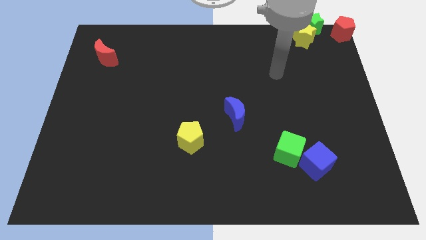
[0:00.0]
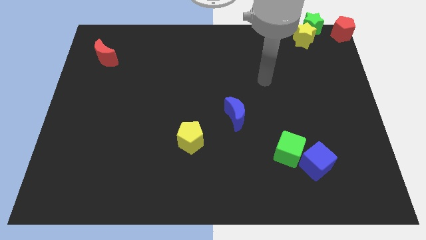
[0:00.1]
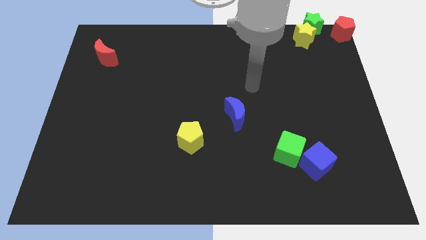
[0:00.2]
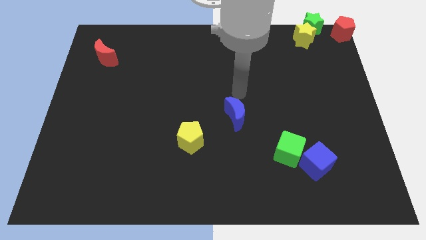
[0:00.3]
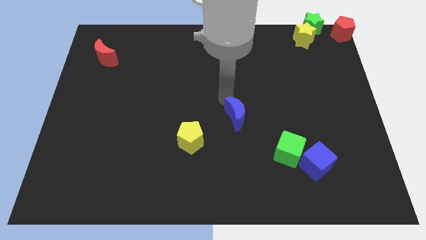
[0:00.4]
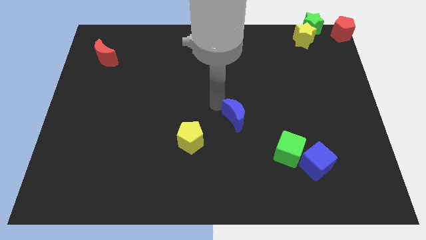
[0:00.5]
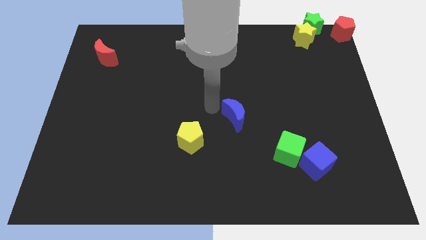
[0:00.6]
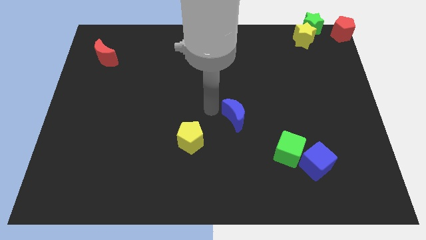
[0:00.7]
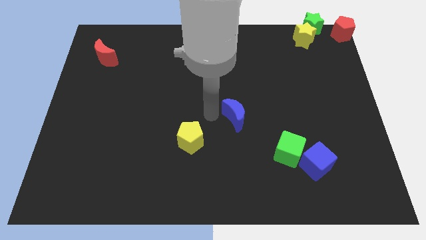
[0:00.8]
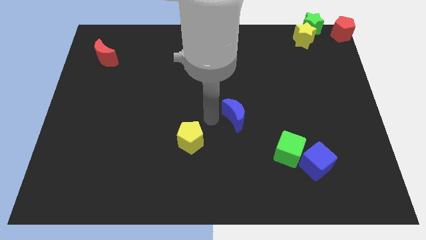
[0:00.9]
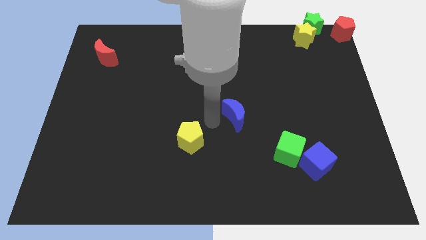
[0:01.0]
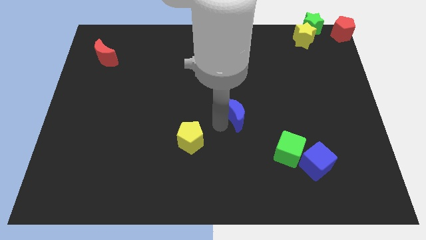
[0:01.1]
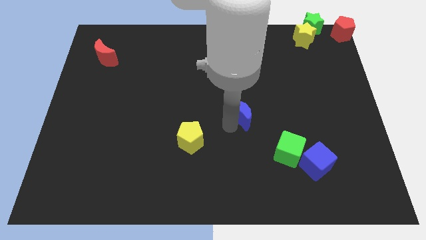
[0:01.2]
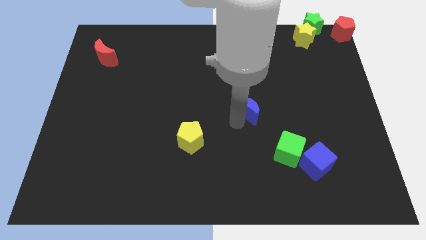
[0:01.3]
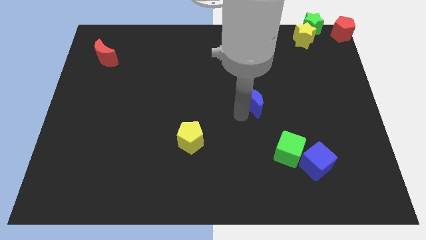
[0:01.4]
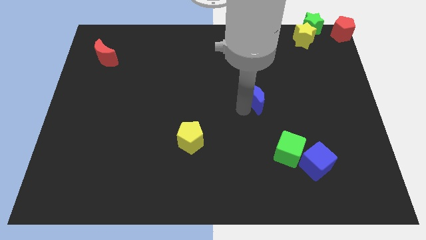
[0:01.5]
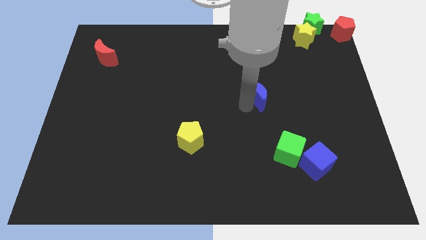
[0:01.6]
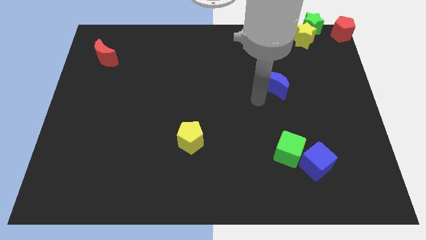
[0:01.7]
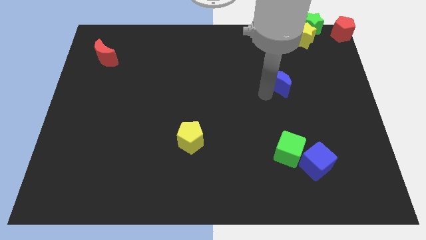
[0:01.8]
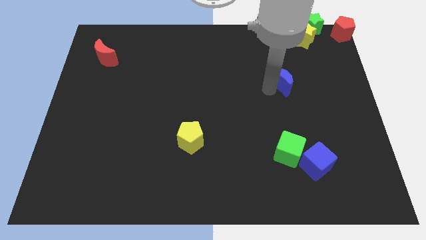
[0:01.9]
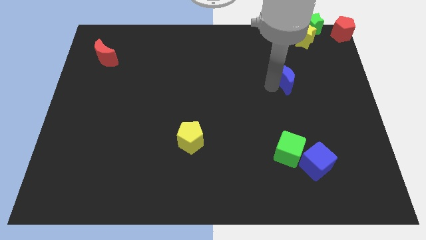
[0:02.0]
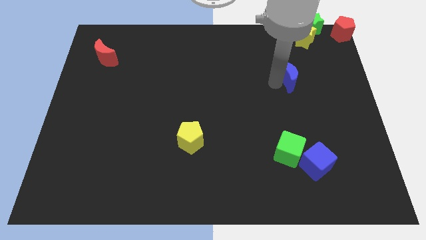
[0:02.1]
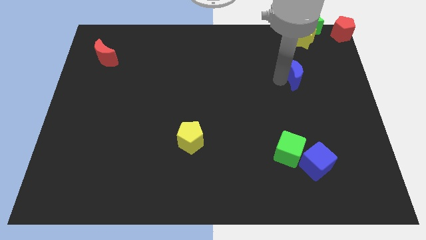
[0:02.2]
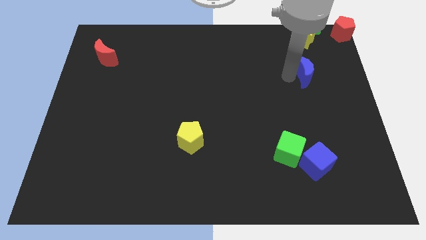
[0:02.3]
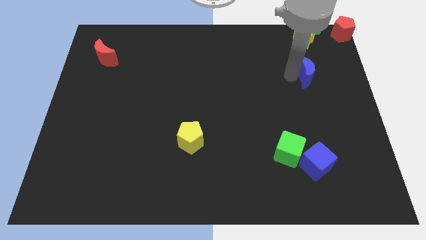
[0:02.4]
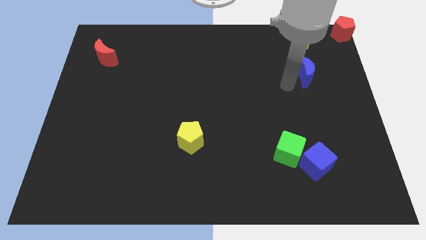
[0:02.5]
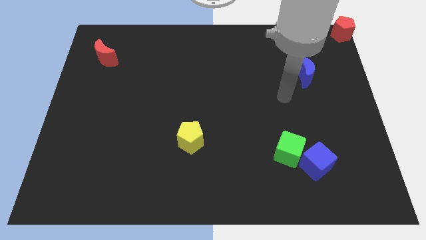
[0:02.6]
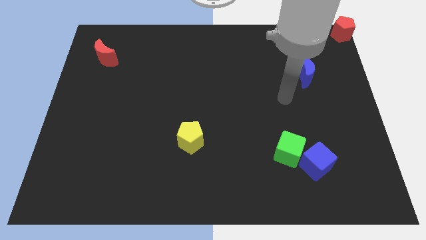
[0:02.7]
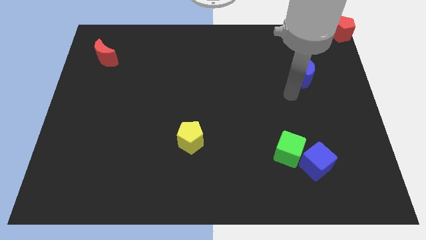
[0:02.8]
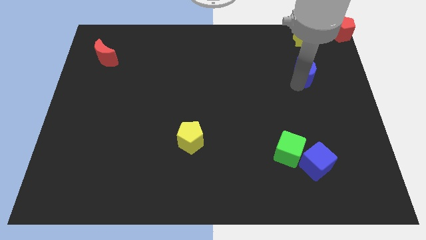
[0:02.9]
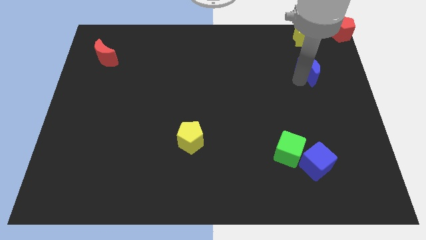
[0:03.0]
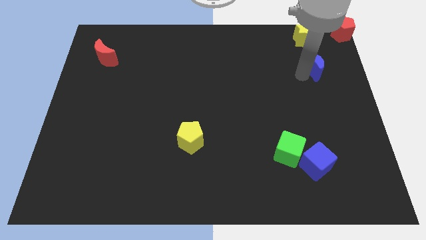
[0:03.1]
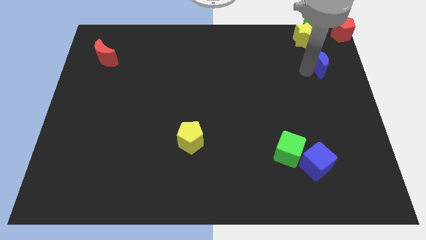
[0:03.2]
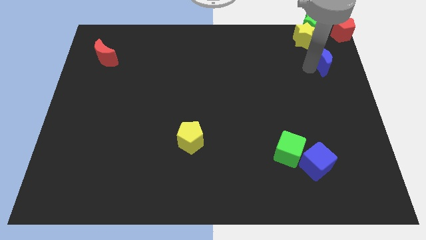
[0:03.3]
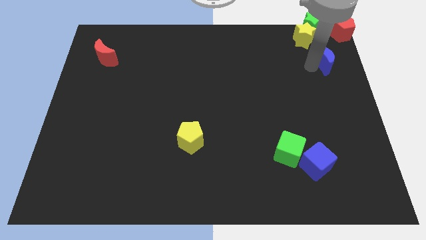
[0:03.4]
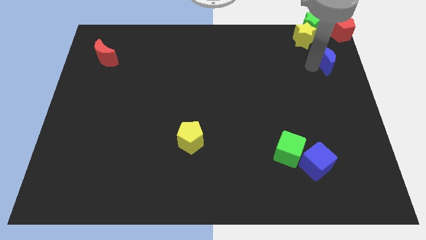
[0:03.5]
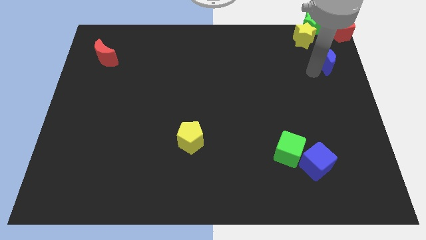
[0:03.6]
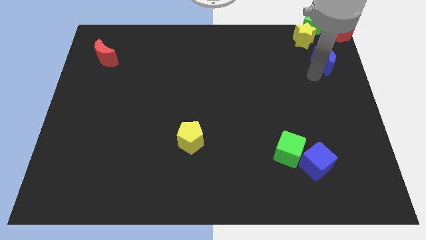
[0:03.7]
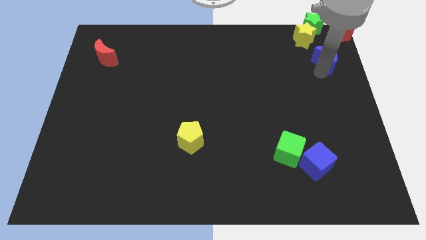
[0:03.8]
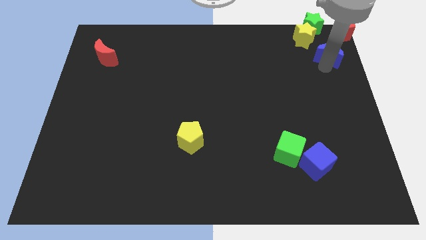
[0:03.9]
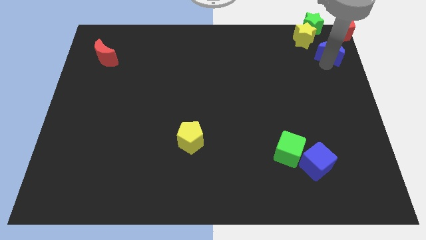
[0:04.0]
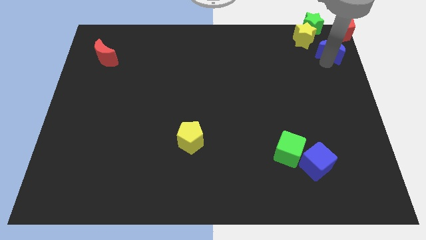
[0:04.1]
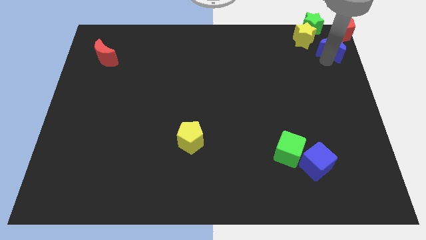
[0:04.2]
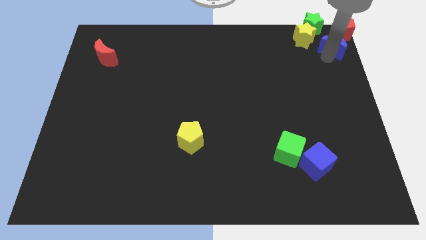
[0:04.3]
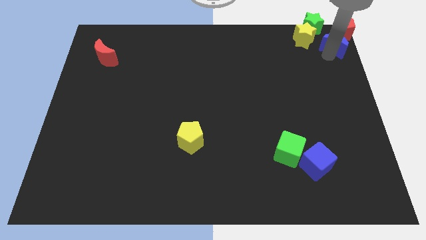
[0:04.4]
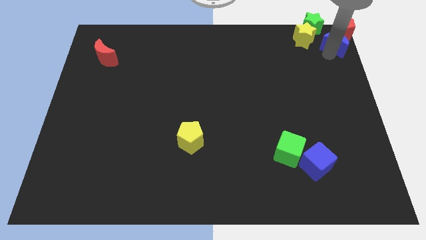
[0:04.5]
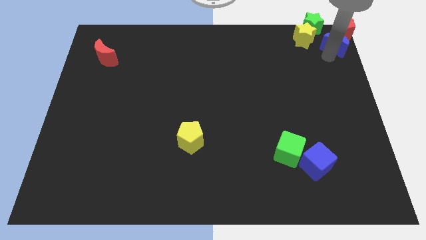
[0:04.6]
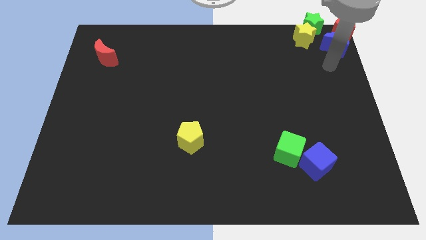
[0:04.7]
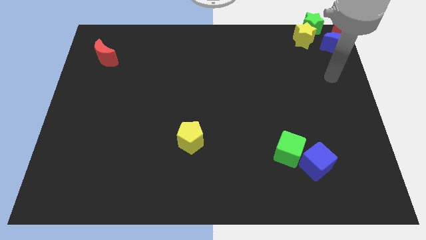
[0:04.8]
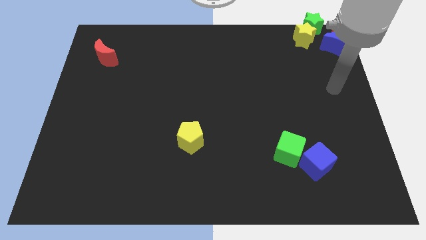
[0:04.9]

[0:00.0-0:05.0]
push the blue crescent to the bottom of the red pentagon

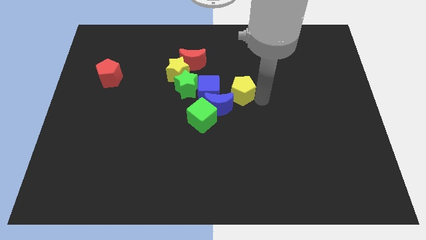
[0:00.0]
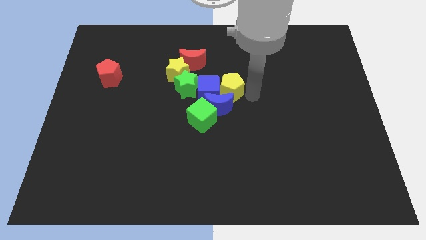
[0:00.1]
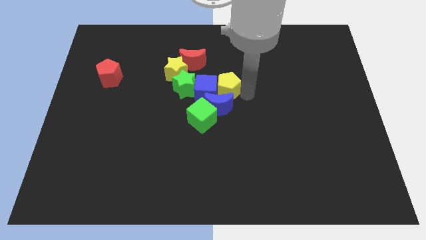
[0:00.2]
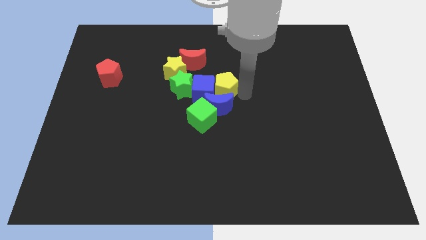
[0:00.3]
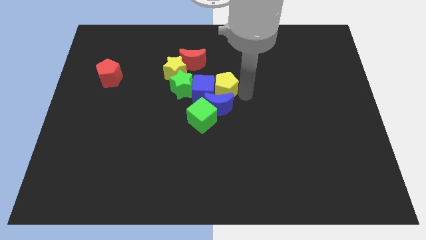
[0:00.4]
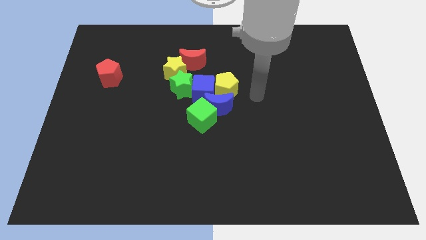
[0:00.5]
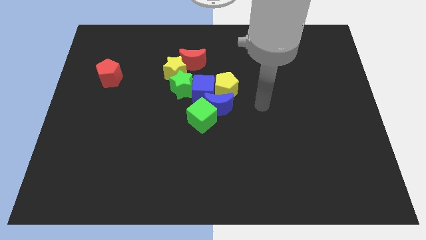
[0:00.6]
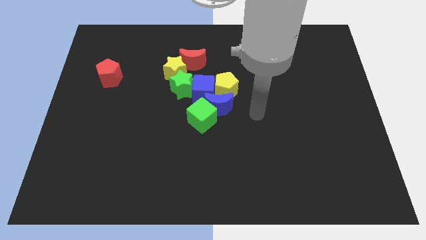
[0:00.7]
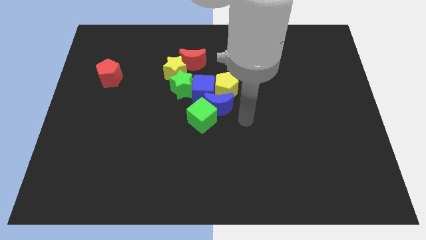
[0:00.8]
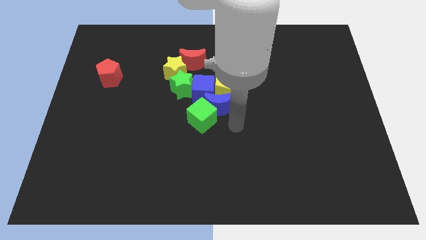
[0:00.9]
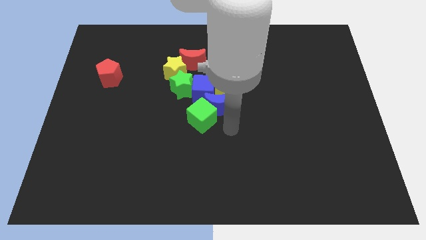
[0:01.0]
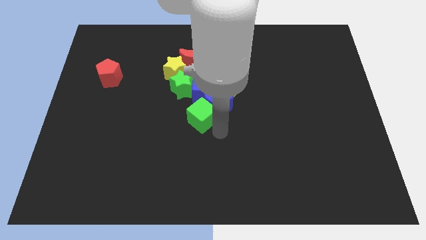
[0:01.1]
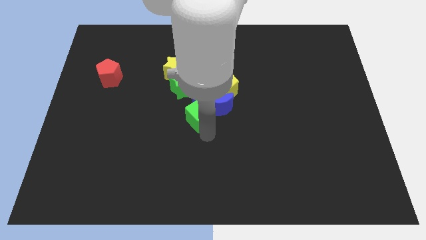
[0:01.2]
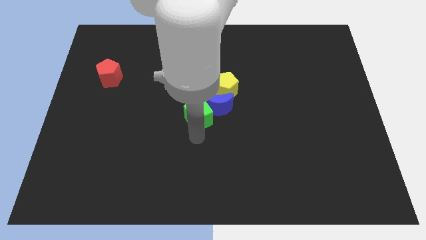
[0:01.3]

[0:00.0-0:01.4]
place the yellow pentagon horizontal to the blue cube

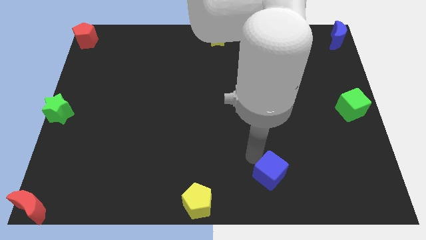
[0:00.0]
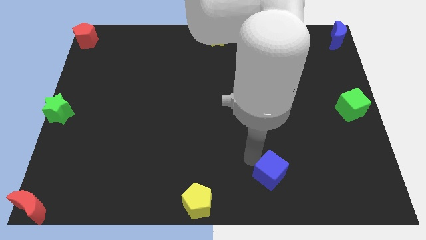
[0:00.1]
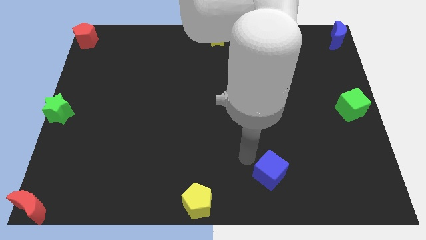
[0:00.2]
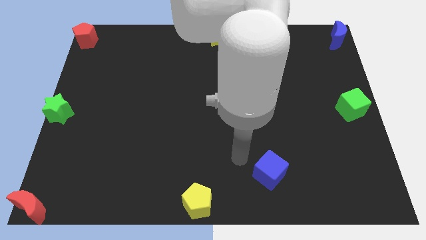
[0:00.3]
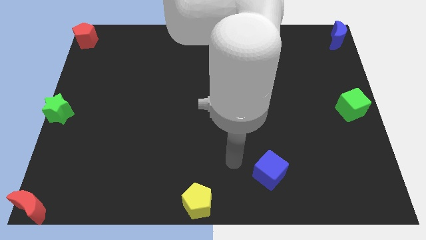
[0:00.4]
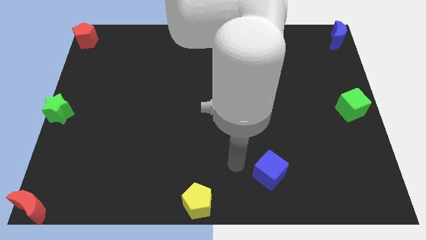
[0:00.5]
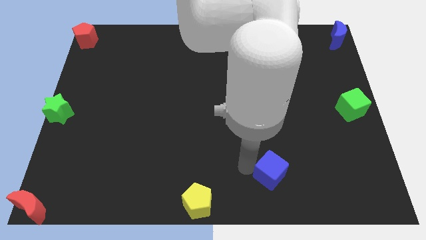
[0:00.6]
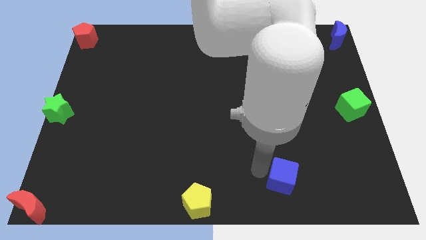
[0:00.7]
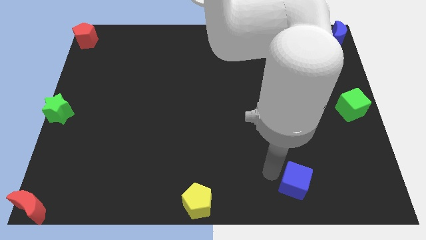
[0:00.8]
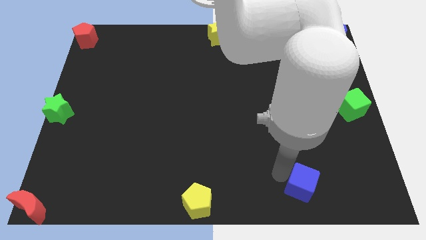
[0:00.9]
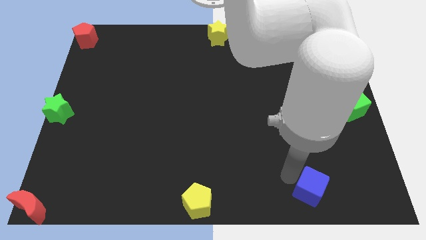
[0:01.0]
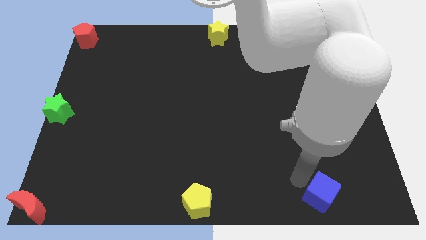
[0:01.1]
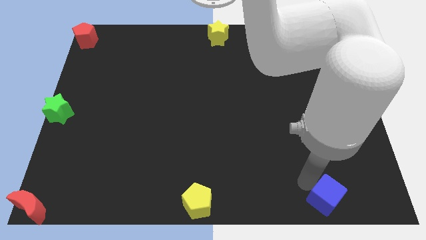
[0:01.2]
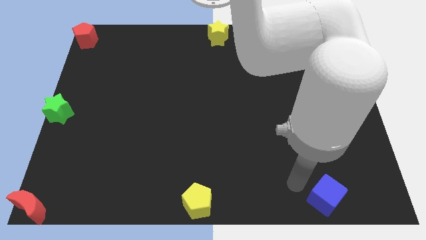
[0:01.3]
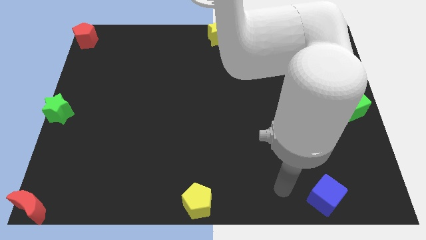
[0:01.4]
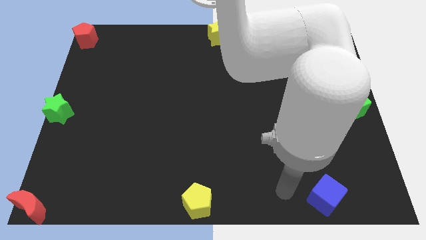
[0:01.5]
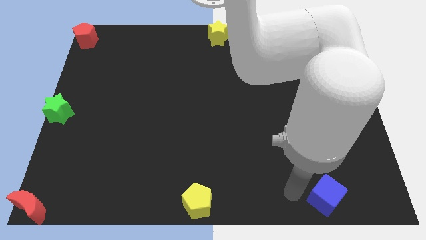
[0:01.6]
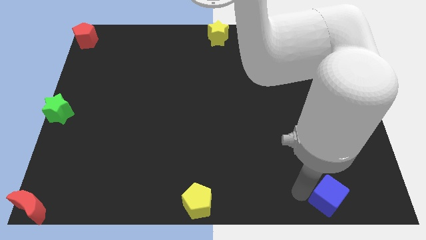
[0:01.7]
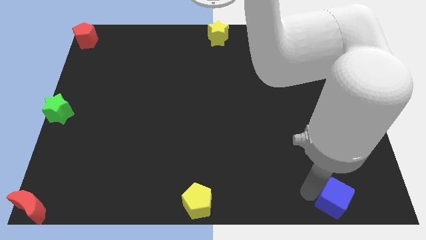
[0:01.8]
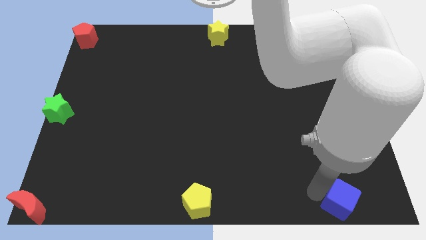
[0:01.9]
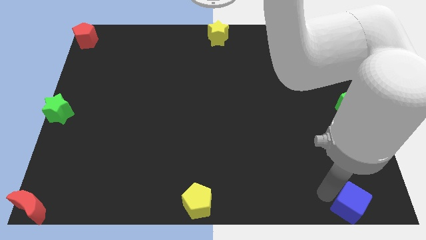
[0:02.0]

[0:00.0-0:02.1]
place the blue cube to the bottom right of the board

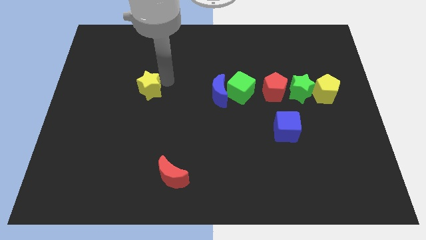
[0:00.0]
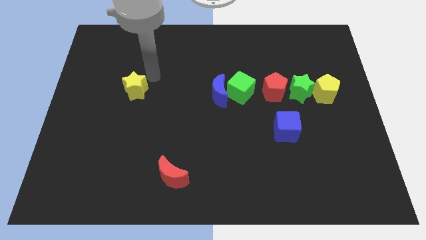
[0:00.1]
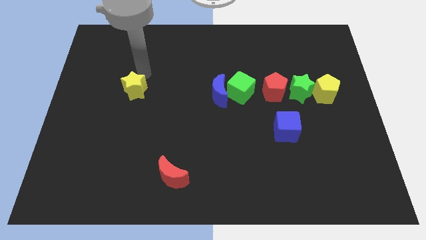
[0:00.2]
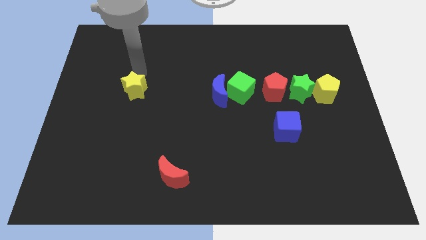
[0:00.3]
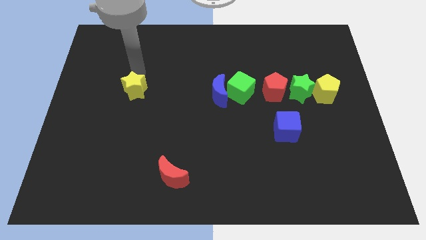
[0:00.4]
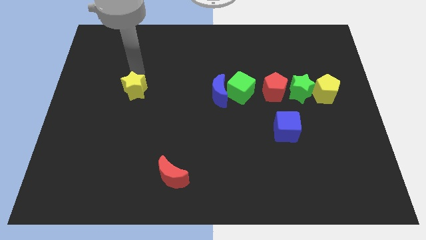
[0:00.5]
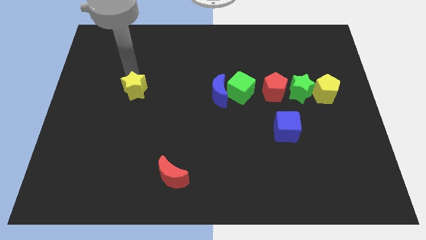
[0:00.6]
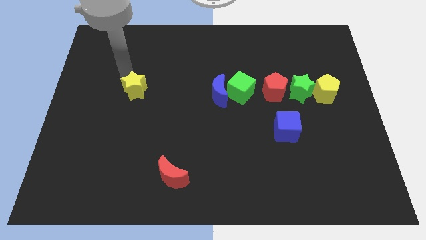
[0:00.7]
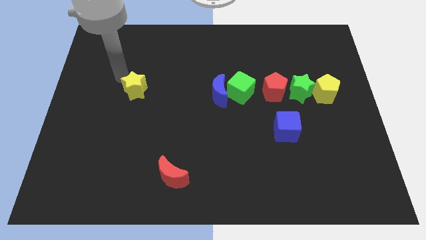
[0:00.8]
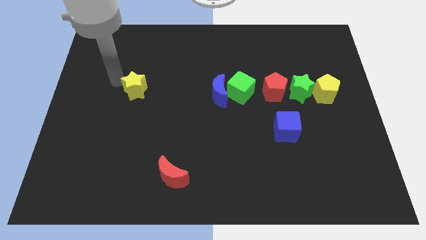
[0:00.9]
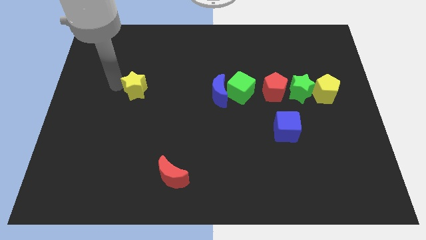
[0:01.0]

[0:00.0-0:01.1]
move arm left to the yellow star
